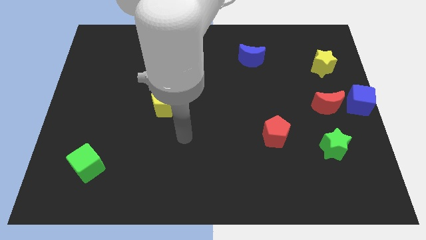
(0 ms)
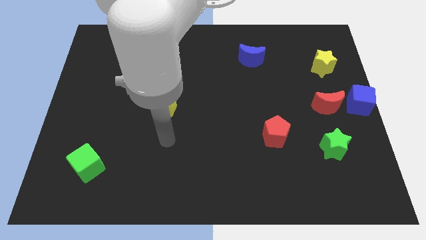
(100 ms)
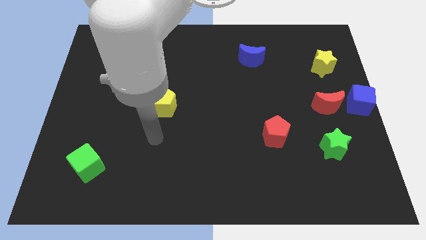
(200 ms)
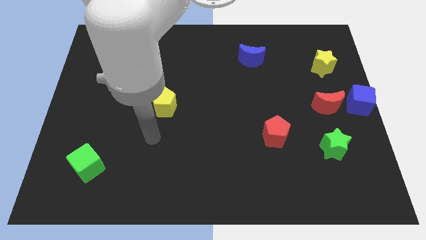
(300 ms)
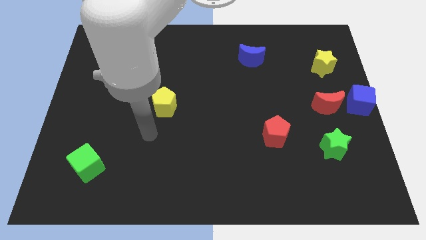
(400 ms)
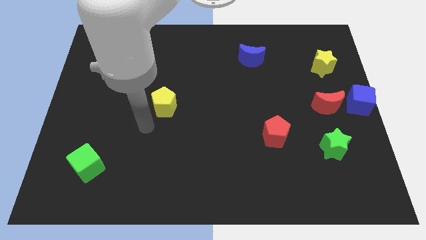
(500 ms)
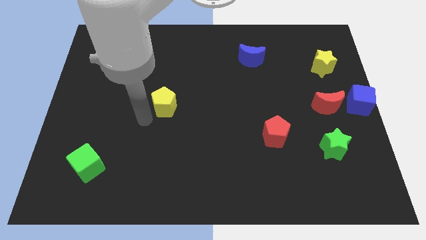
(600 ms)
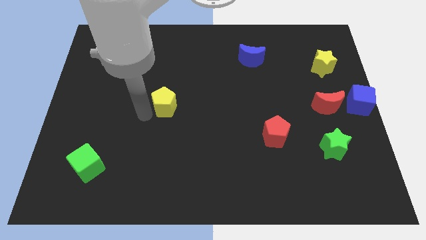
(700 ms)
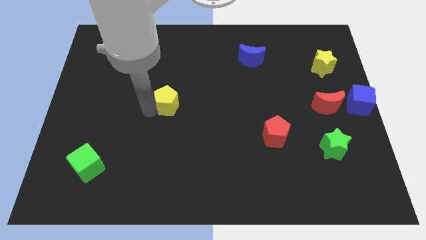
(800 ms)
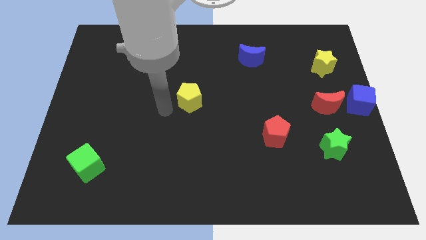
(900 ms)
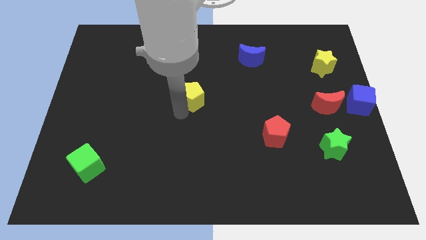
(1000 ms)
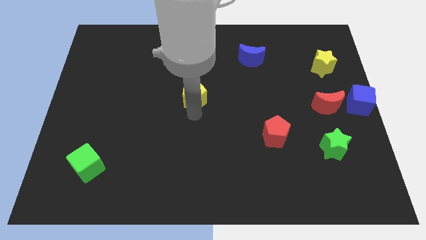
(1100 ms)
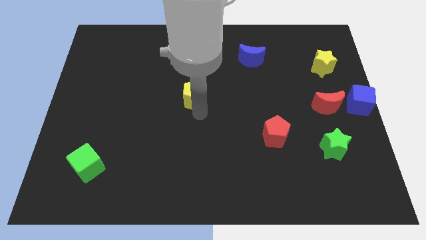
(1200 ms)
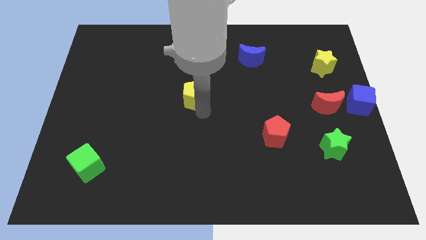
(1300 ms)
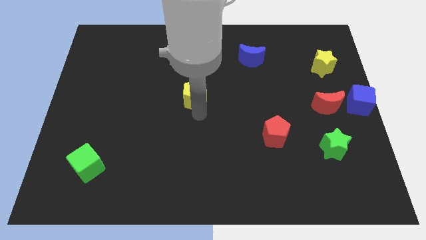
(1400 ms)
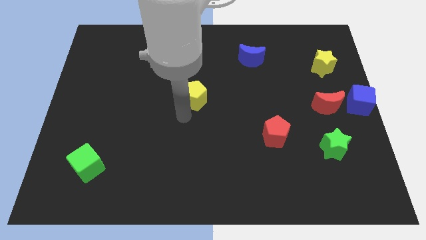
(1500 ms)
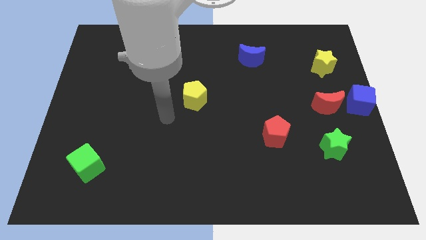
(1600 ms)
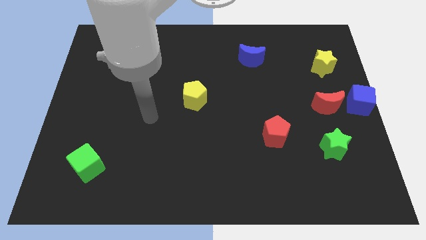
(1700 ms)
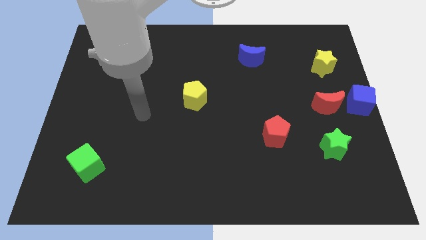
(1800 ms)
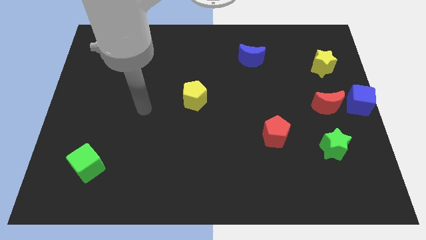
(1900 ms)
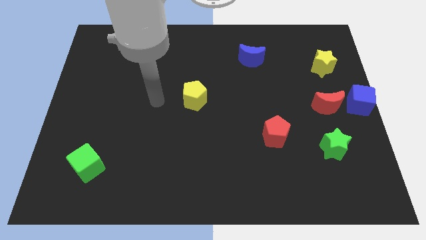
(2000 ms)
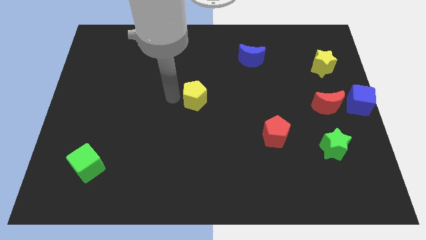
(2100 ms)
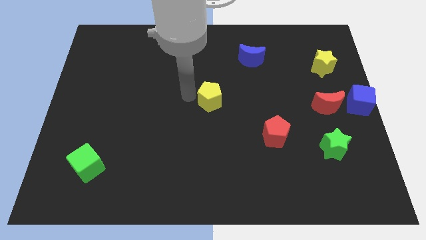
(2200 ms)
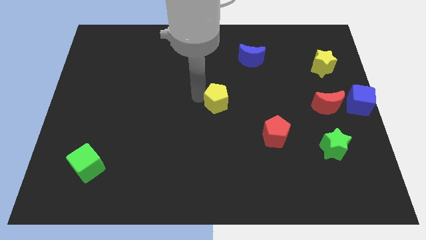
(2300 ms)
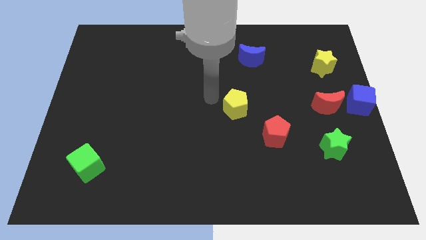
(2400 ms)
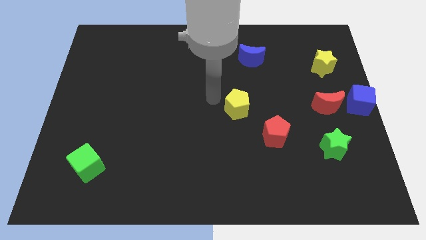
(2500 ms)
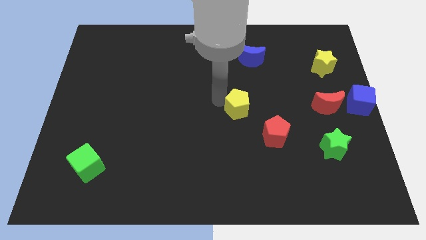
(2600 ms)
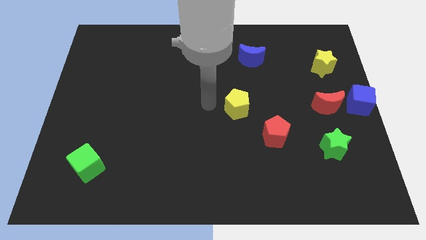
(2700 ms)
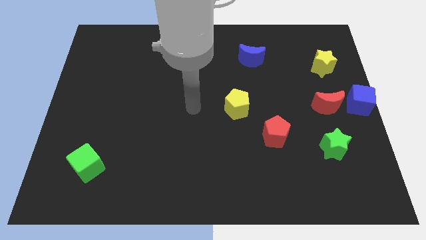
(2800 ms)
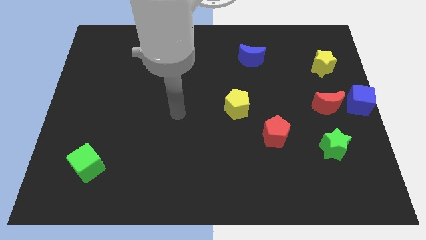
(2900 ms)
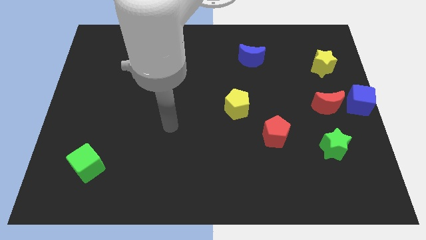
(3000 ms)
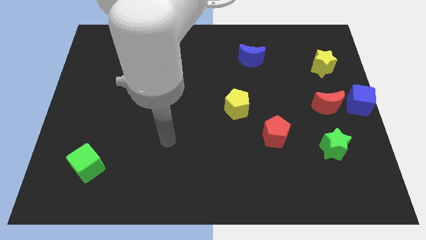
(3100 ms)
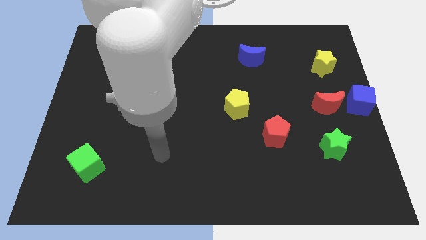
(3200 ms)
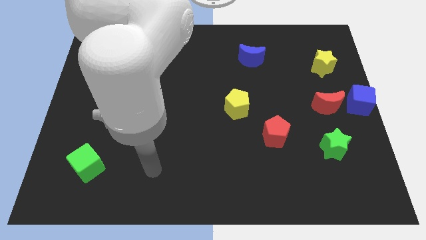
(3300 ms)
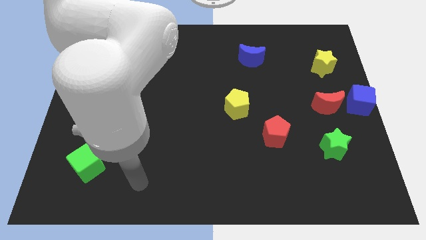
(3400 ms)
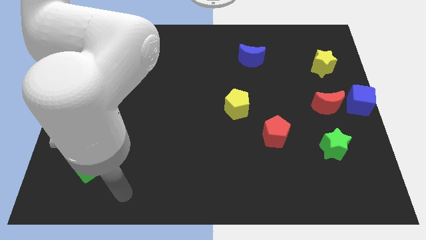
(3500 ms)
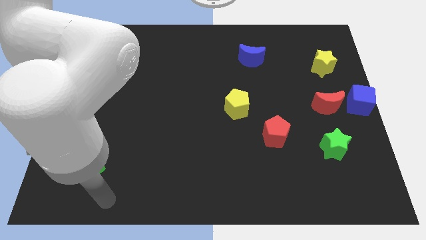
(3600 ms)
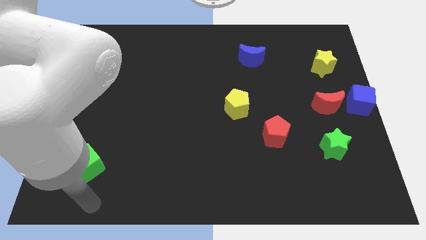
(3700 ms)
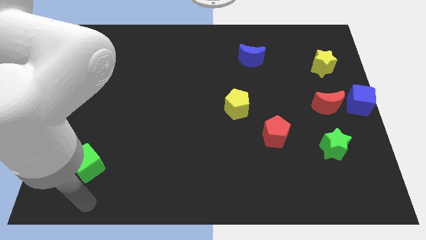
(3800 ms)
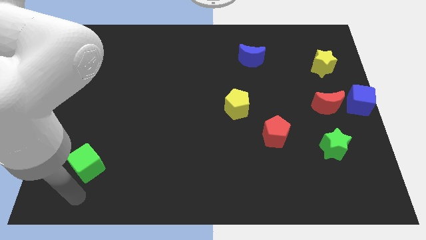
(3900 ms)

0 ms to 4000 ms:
place the yellow pentagon towards the top left side of the red pentagon

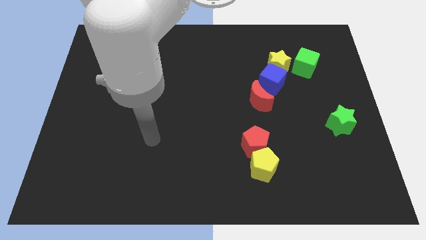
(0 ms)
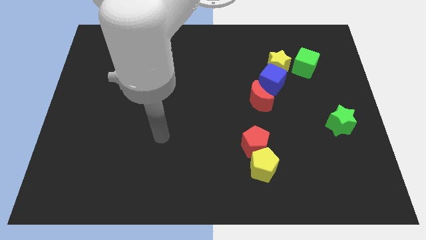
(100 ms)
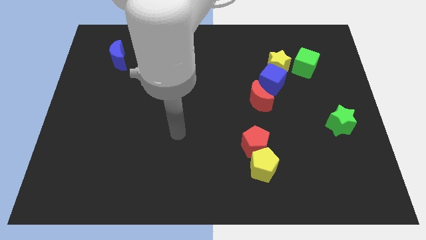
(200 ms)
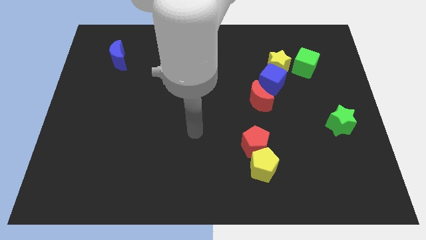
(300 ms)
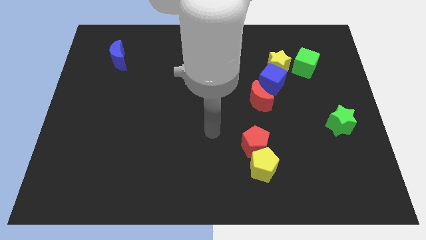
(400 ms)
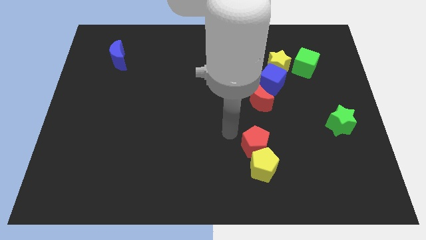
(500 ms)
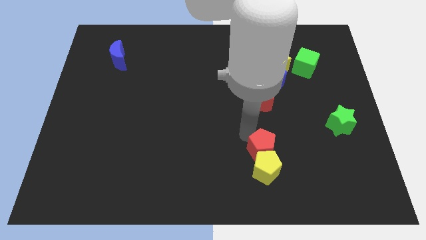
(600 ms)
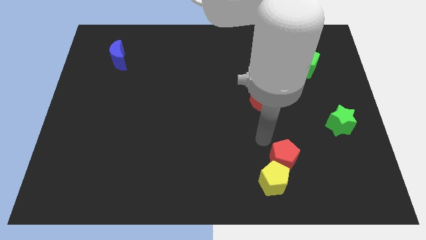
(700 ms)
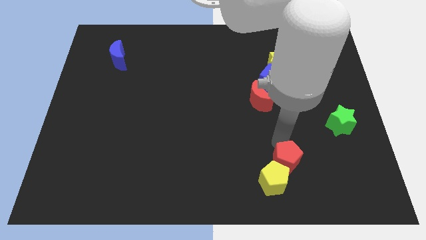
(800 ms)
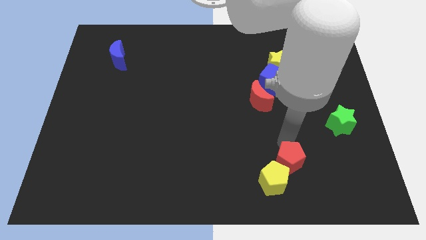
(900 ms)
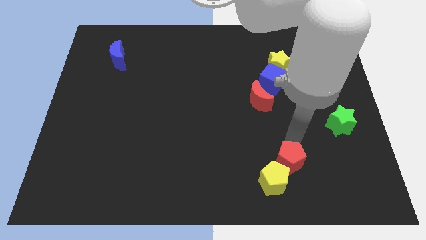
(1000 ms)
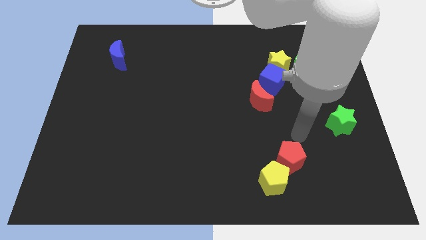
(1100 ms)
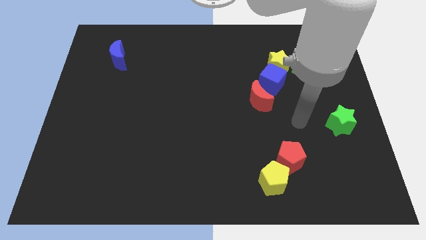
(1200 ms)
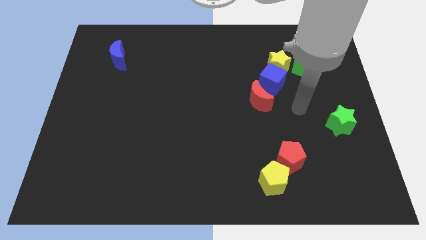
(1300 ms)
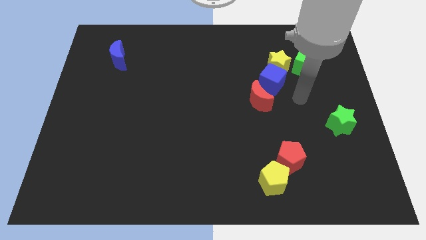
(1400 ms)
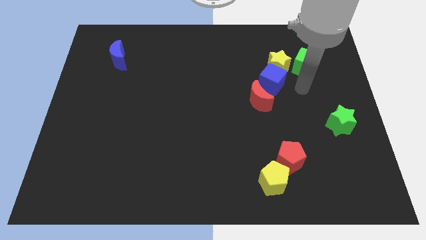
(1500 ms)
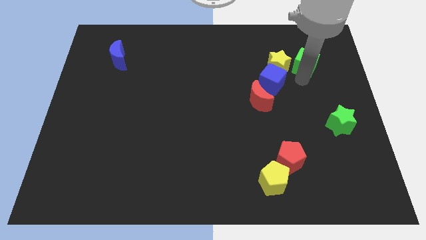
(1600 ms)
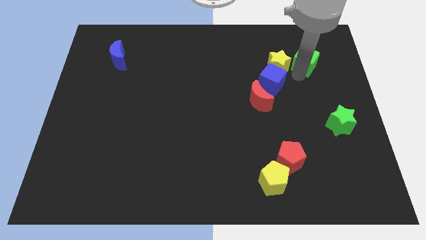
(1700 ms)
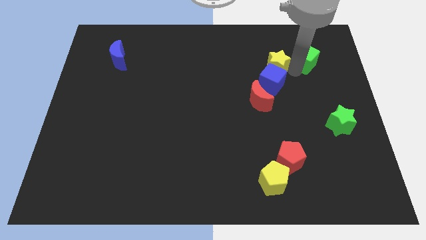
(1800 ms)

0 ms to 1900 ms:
touch the red pentagon

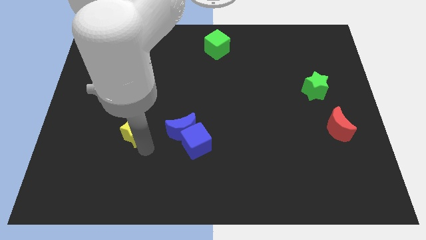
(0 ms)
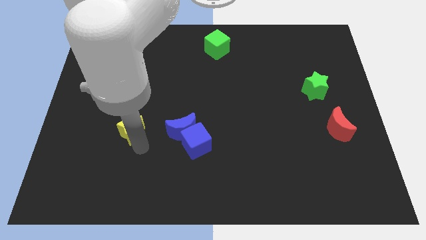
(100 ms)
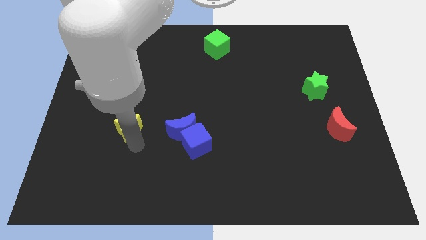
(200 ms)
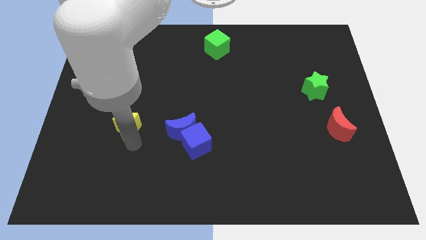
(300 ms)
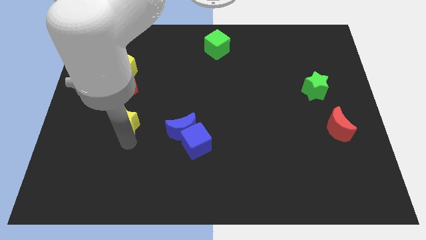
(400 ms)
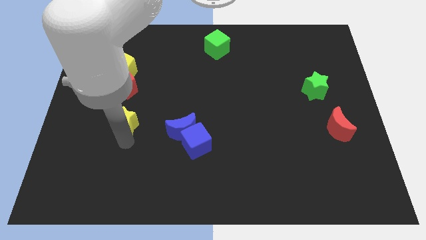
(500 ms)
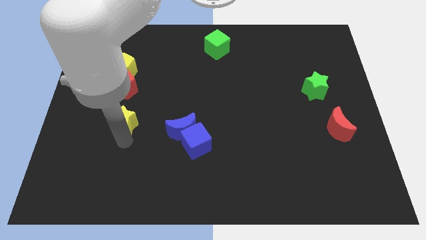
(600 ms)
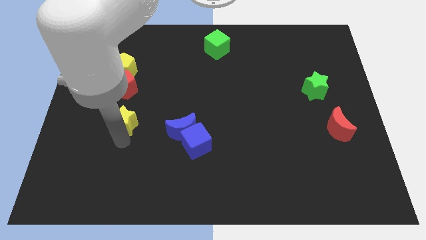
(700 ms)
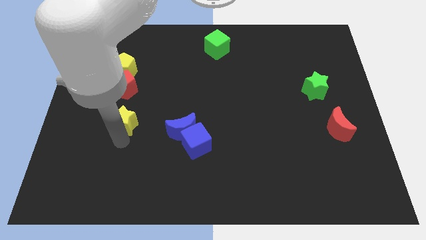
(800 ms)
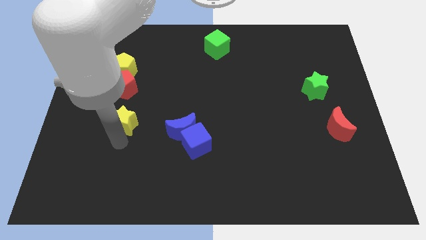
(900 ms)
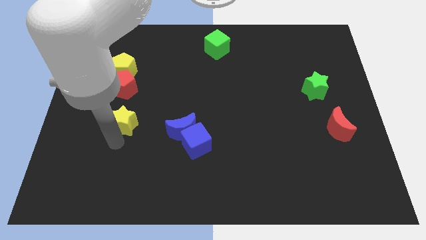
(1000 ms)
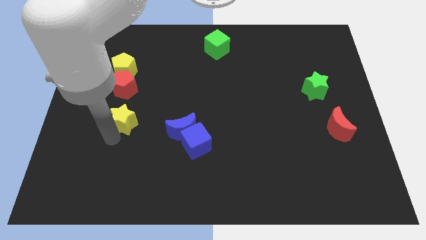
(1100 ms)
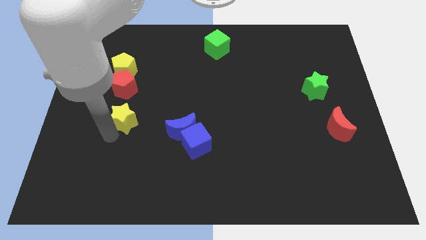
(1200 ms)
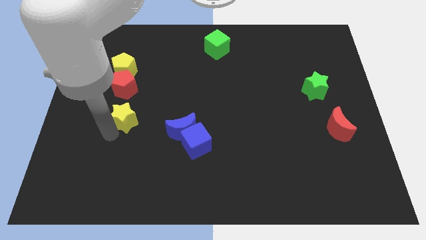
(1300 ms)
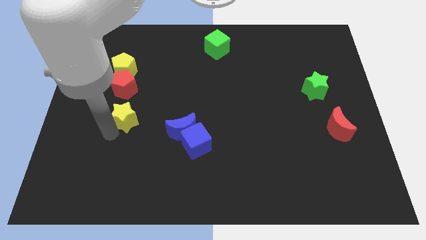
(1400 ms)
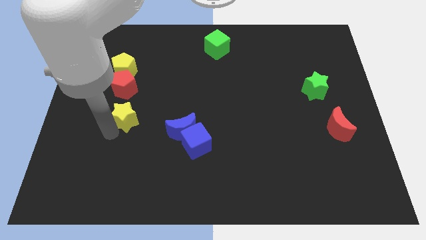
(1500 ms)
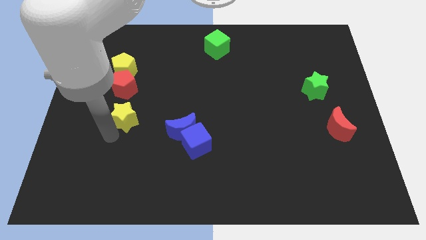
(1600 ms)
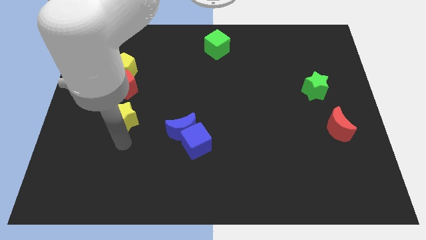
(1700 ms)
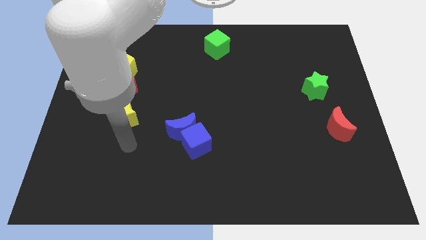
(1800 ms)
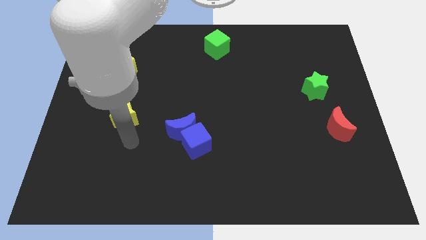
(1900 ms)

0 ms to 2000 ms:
push the yellow star below the red pentagon

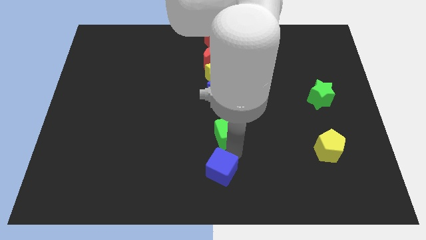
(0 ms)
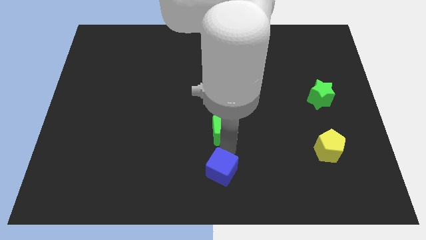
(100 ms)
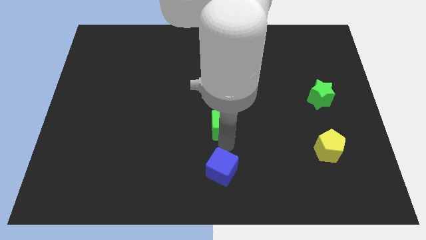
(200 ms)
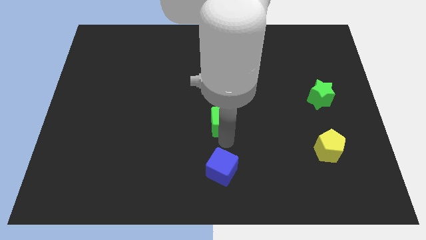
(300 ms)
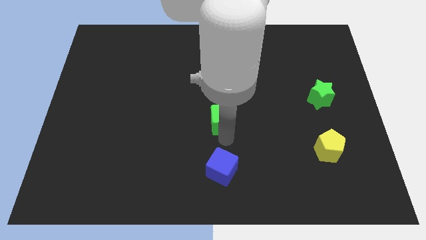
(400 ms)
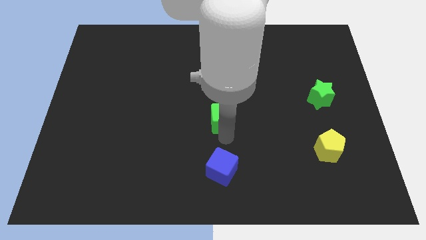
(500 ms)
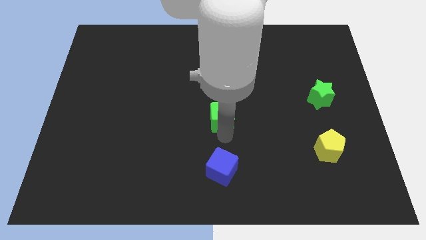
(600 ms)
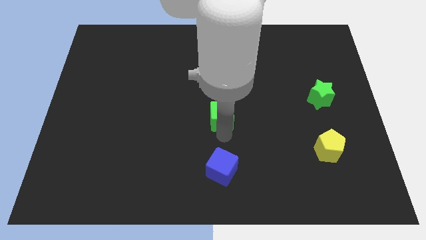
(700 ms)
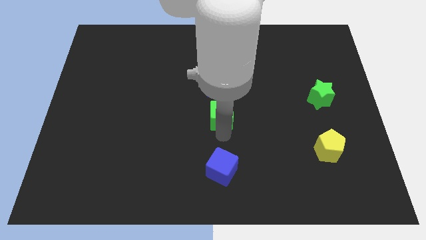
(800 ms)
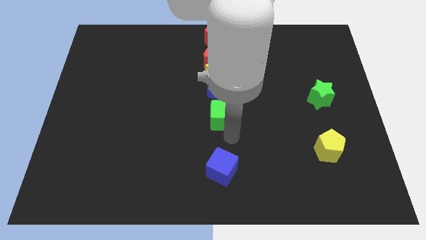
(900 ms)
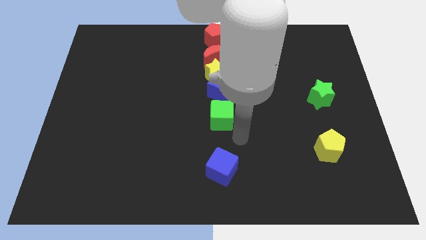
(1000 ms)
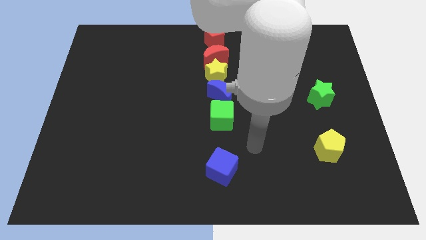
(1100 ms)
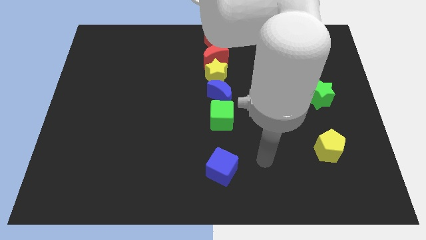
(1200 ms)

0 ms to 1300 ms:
move the green cube slightly towards up
